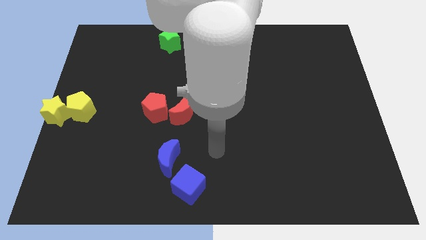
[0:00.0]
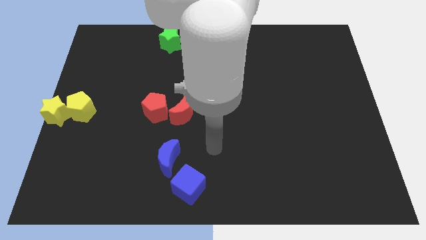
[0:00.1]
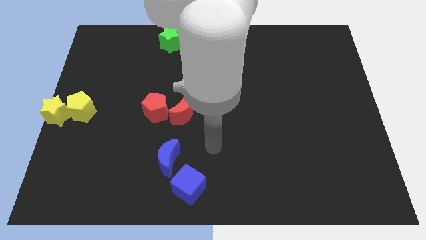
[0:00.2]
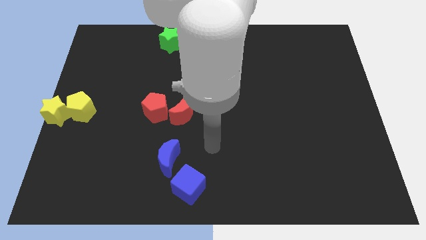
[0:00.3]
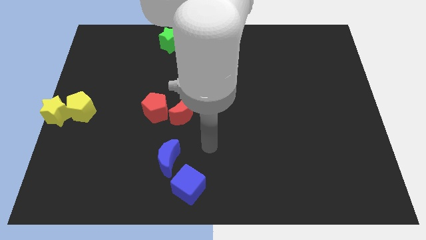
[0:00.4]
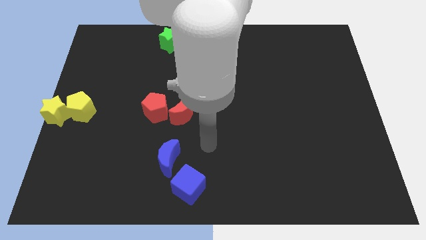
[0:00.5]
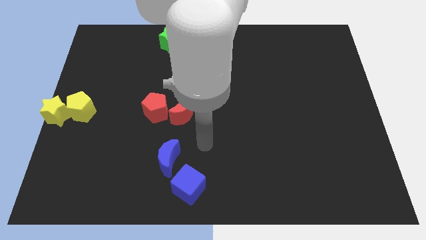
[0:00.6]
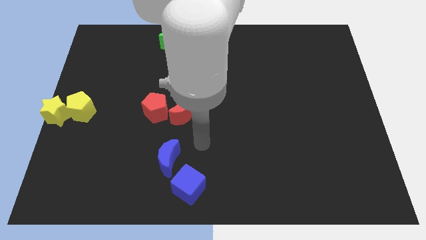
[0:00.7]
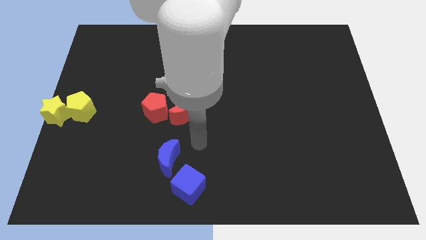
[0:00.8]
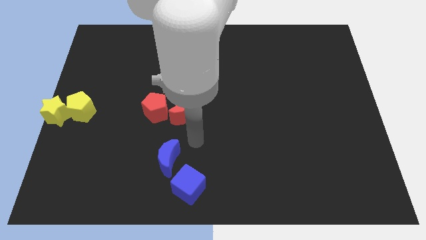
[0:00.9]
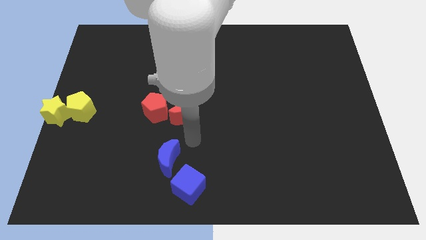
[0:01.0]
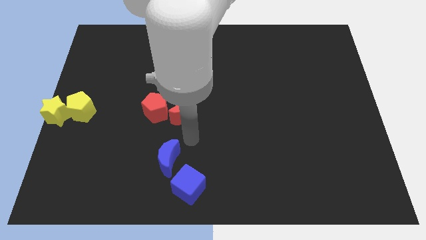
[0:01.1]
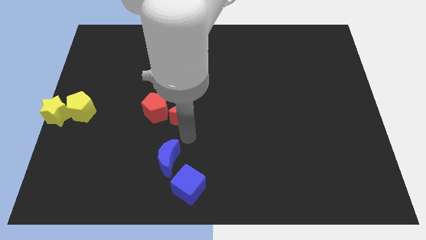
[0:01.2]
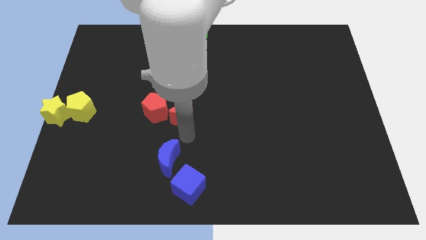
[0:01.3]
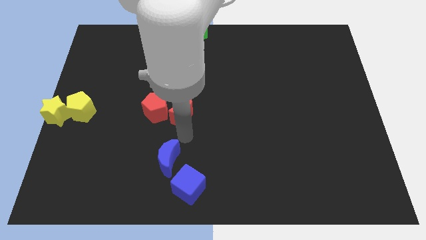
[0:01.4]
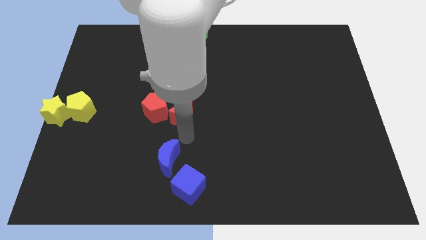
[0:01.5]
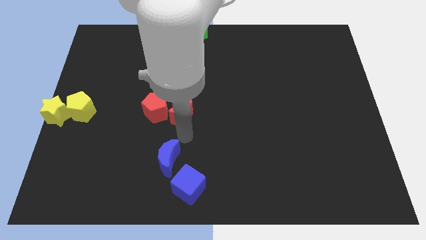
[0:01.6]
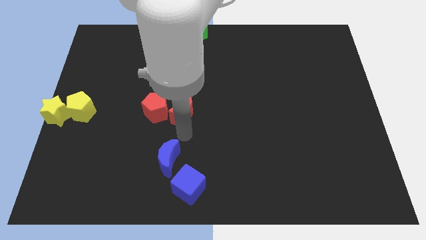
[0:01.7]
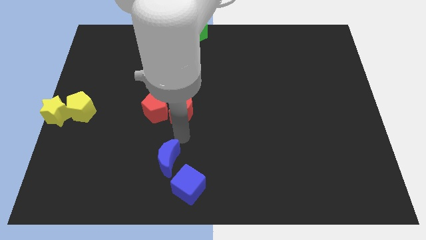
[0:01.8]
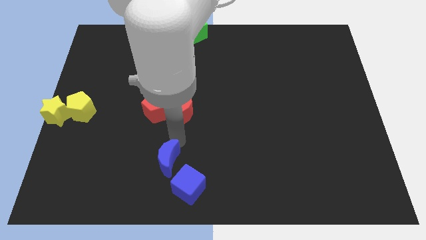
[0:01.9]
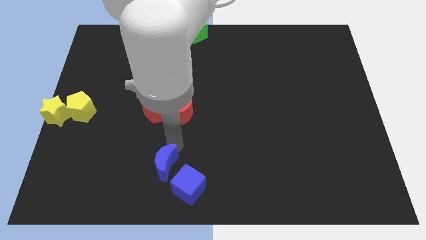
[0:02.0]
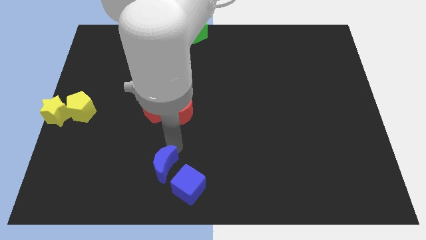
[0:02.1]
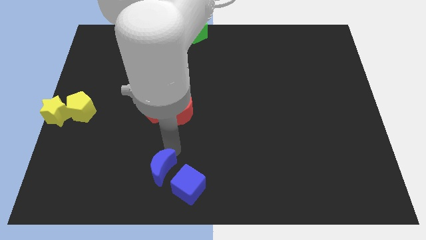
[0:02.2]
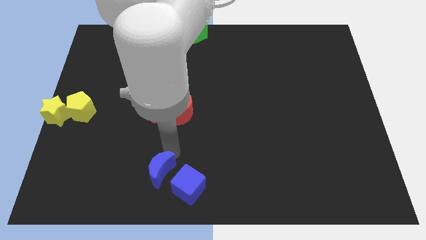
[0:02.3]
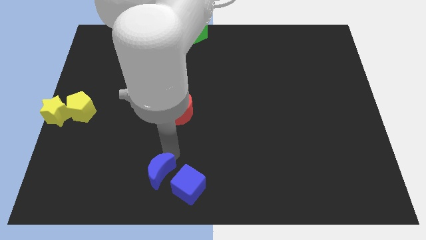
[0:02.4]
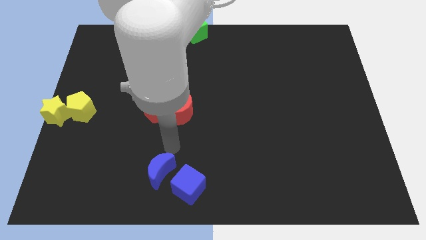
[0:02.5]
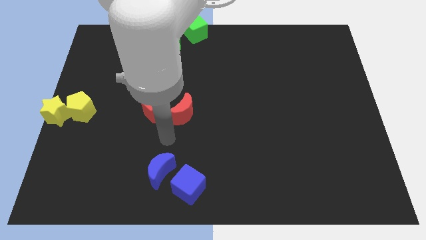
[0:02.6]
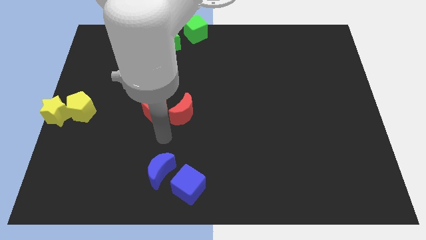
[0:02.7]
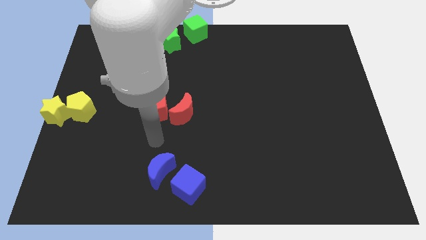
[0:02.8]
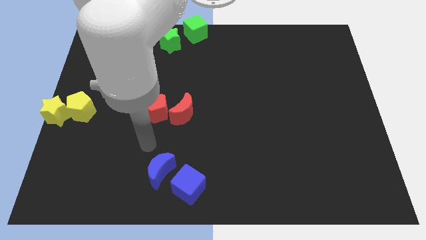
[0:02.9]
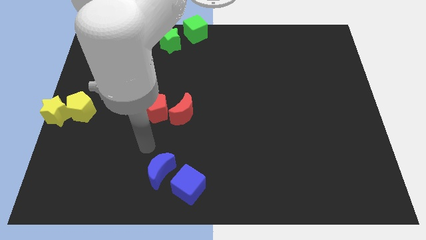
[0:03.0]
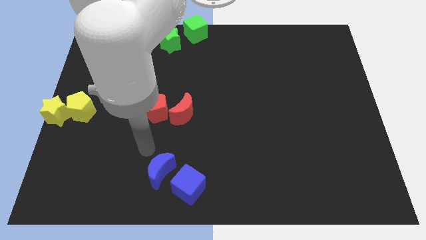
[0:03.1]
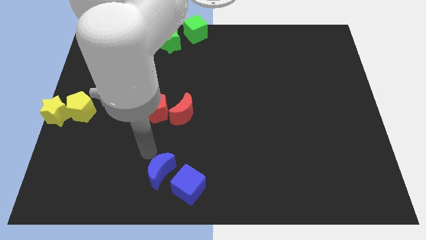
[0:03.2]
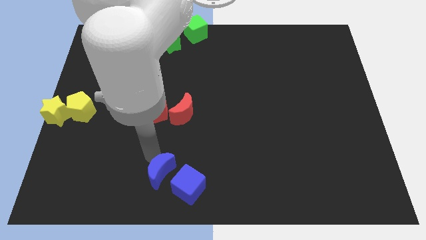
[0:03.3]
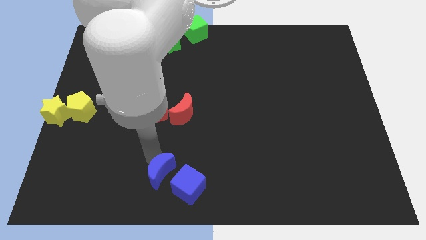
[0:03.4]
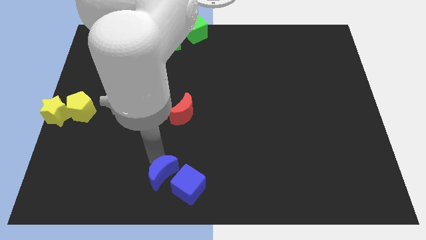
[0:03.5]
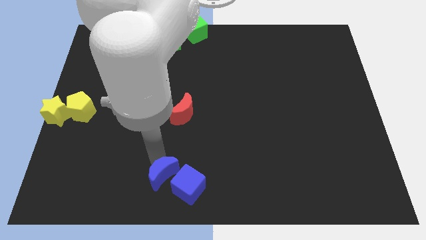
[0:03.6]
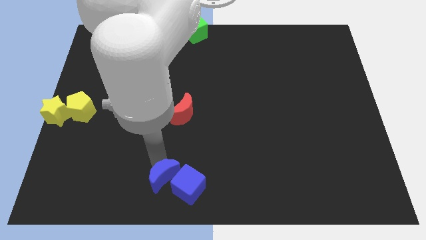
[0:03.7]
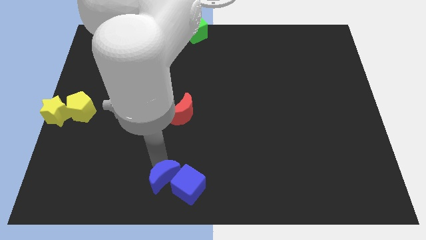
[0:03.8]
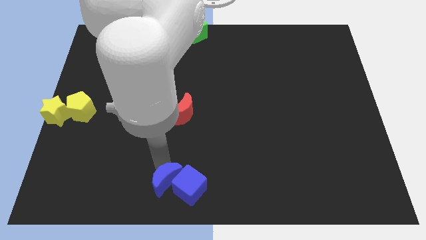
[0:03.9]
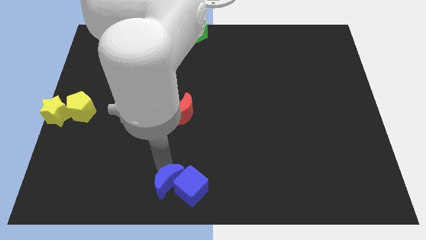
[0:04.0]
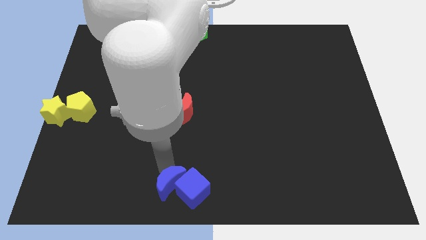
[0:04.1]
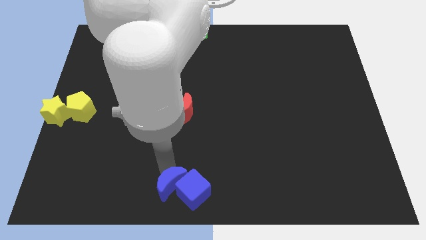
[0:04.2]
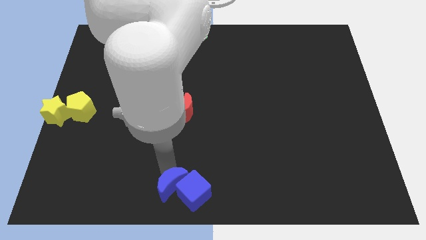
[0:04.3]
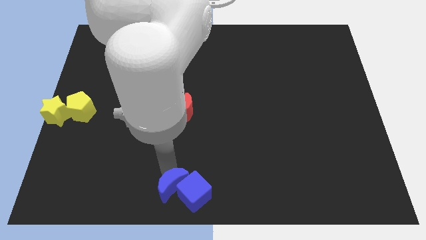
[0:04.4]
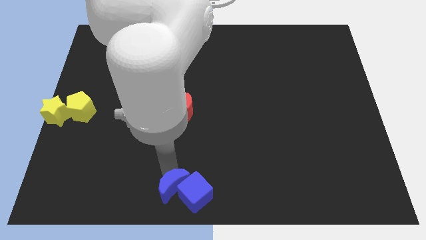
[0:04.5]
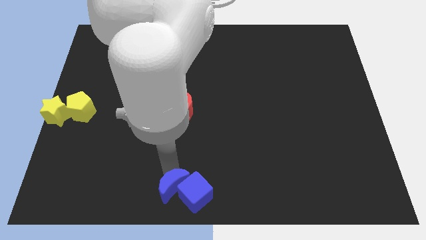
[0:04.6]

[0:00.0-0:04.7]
push the blue cube with the help of blue crescent towards the bottom center of the board

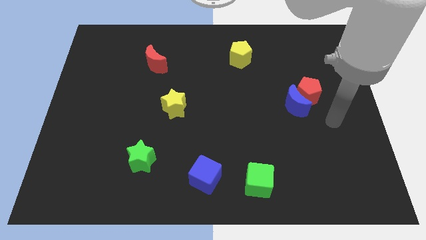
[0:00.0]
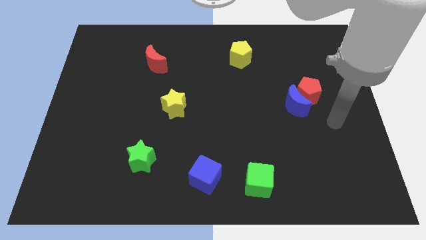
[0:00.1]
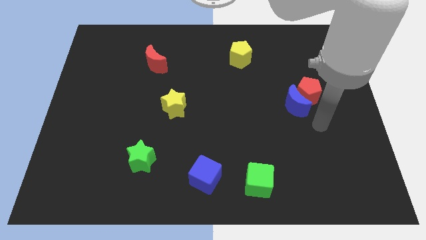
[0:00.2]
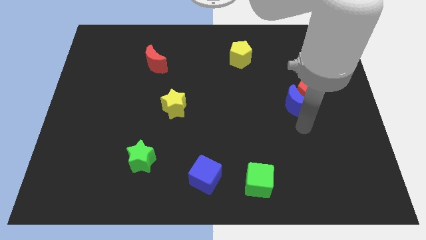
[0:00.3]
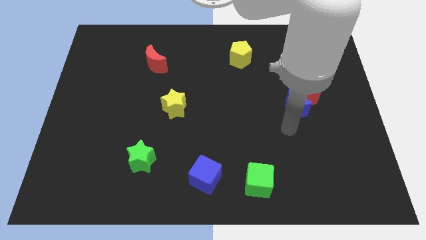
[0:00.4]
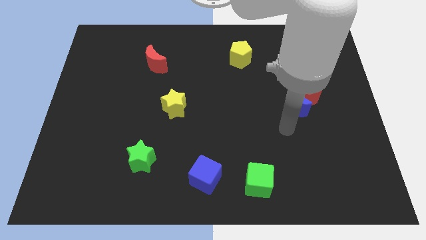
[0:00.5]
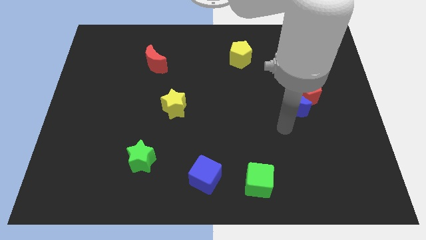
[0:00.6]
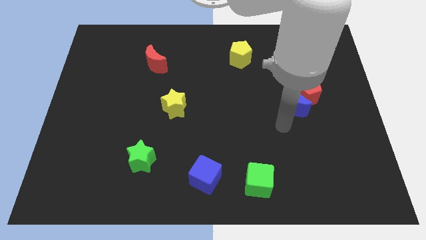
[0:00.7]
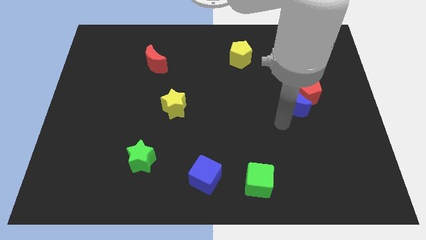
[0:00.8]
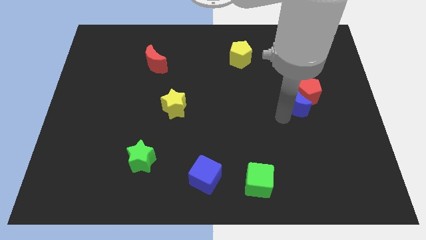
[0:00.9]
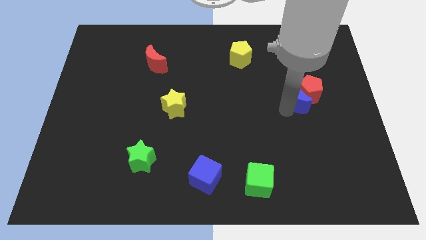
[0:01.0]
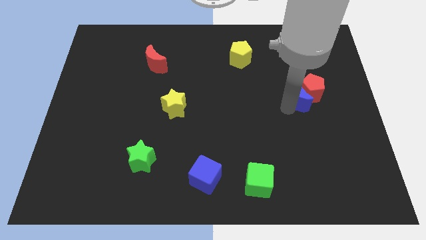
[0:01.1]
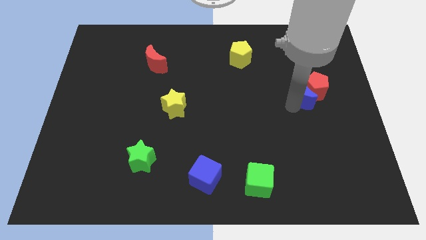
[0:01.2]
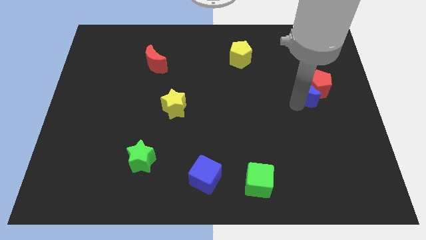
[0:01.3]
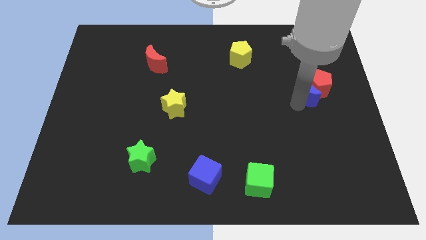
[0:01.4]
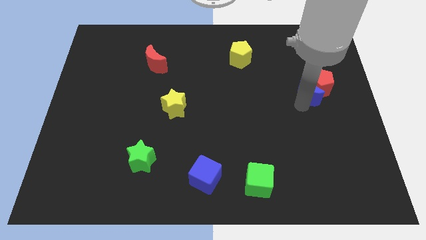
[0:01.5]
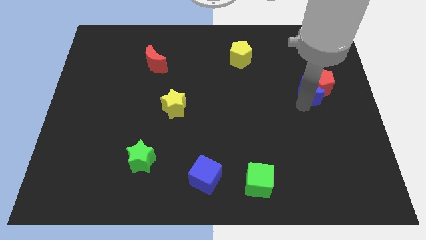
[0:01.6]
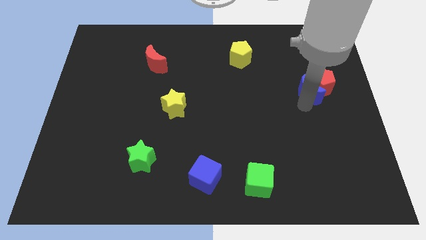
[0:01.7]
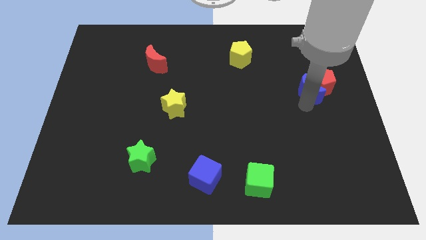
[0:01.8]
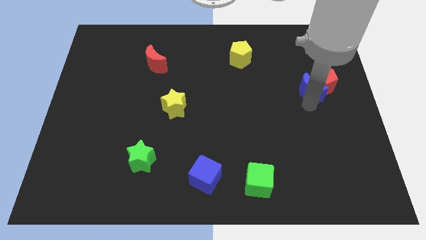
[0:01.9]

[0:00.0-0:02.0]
move the blue moon along with the red pentagon towards the top right

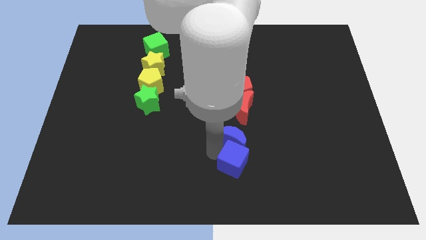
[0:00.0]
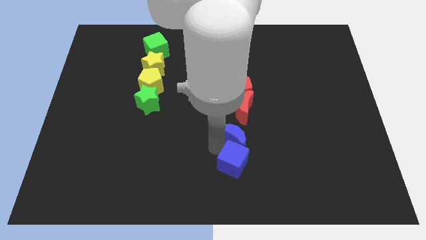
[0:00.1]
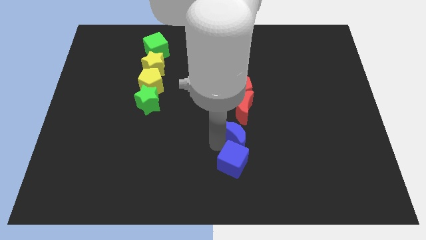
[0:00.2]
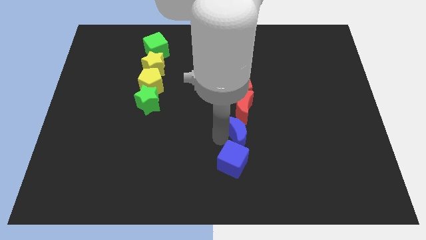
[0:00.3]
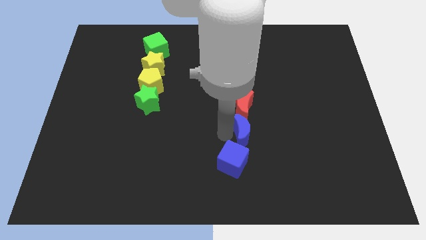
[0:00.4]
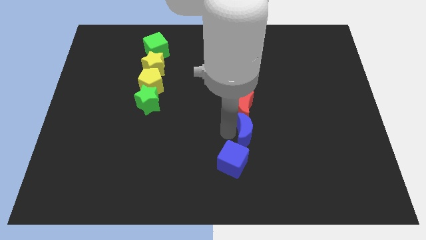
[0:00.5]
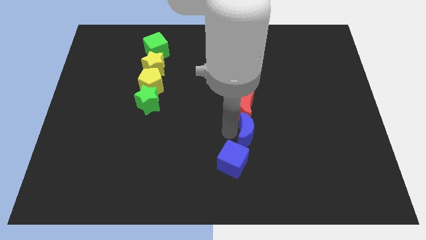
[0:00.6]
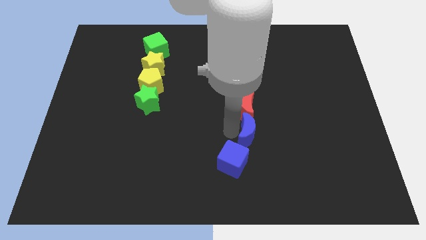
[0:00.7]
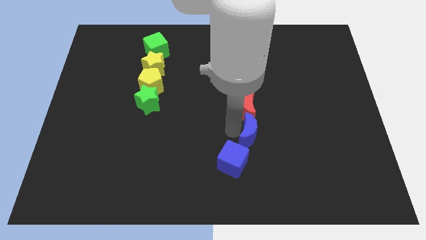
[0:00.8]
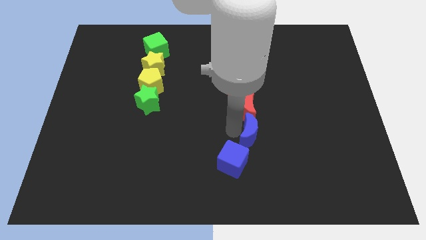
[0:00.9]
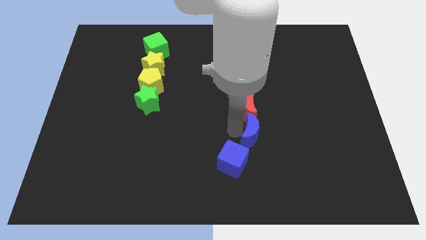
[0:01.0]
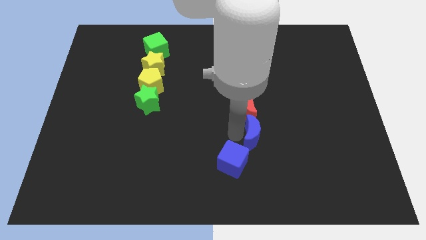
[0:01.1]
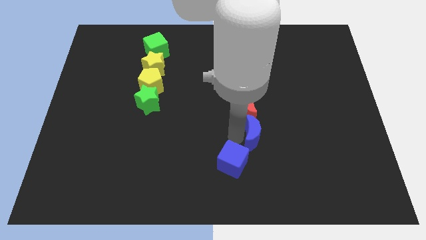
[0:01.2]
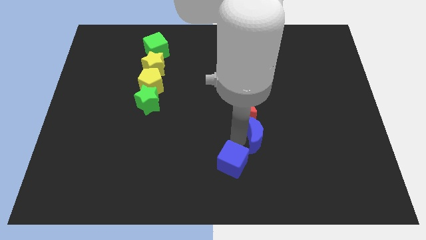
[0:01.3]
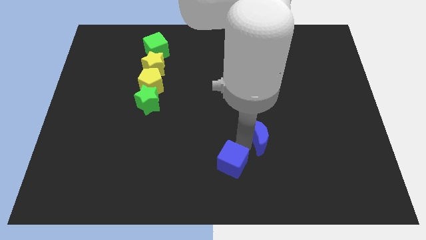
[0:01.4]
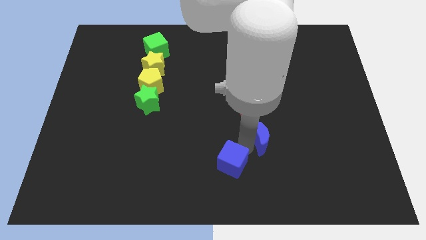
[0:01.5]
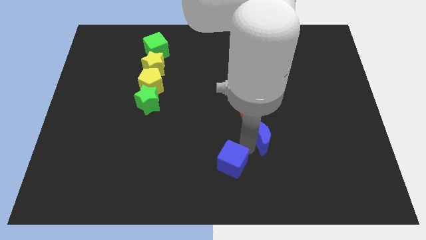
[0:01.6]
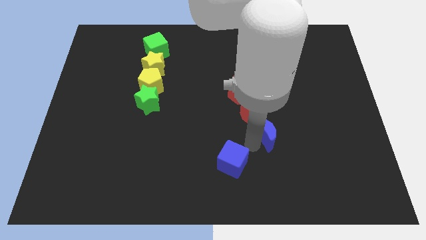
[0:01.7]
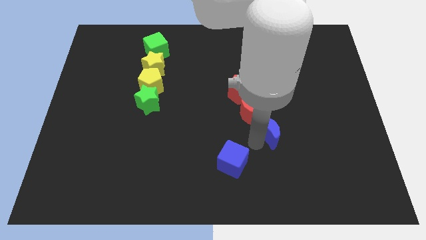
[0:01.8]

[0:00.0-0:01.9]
separate the blue crescent from the blue cube

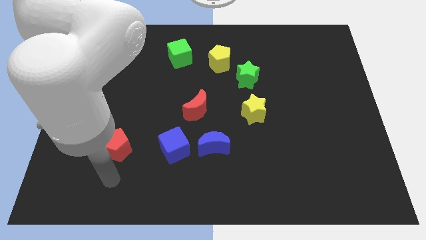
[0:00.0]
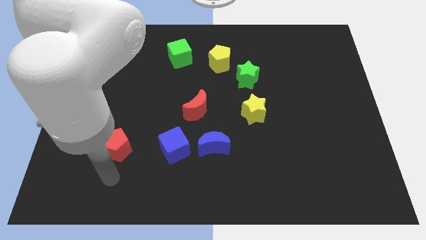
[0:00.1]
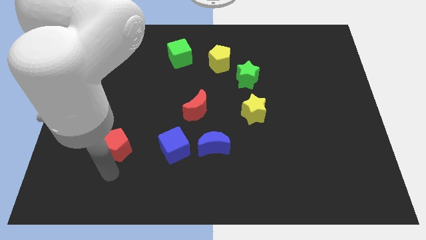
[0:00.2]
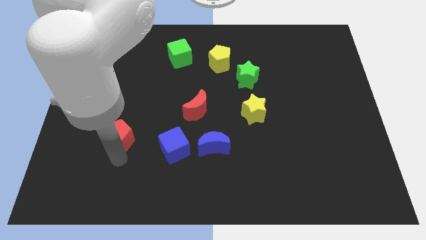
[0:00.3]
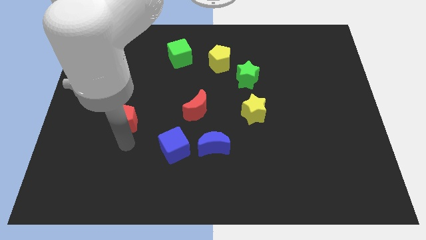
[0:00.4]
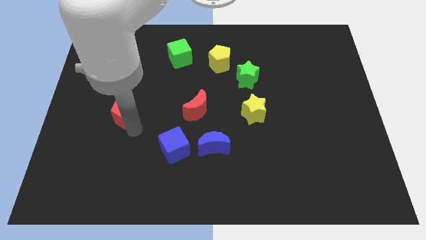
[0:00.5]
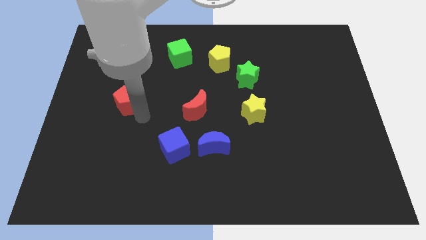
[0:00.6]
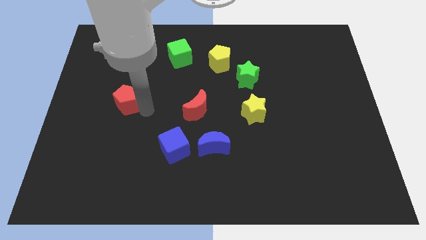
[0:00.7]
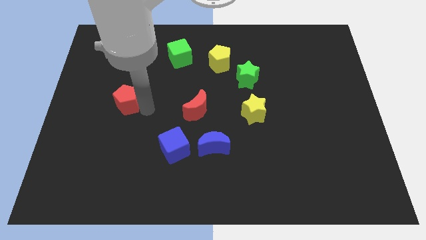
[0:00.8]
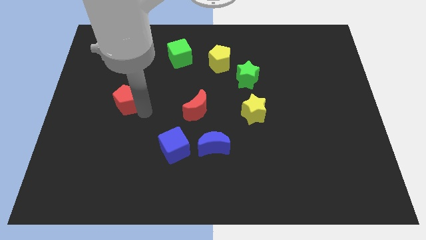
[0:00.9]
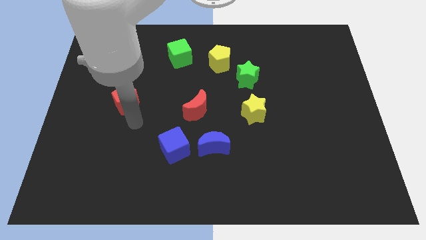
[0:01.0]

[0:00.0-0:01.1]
push the red pentagon towards the top center of the board
